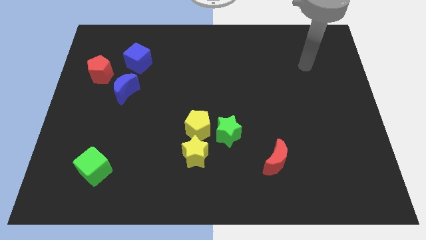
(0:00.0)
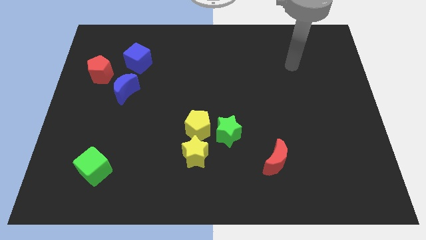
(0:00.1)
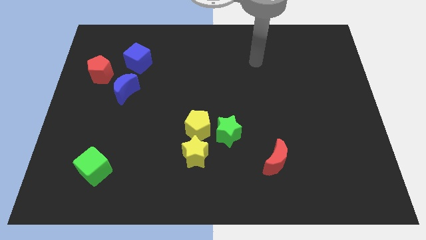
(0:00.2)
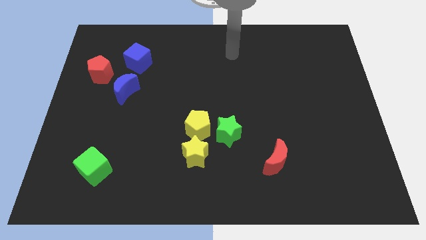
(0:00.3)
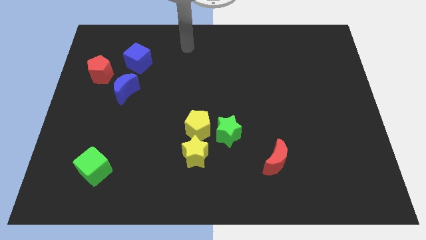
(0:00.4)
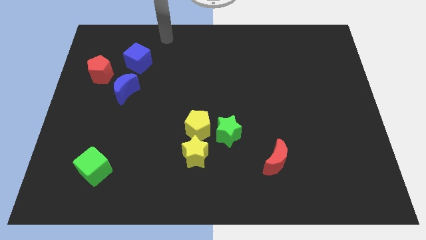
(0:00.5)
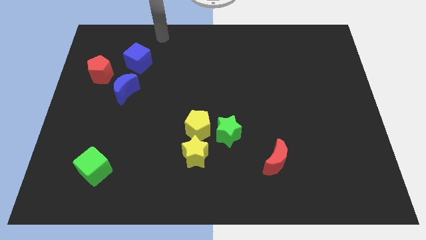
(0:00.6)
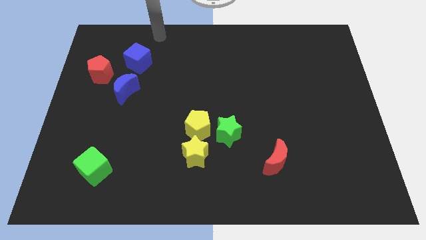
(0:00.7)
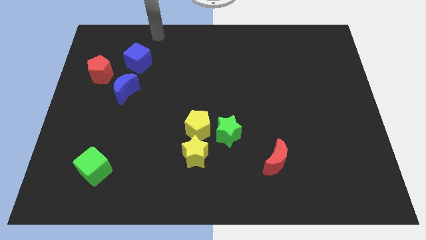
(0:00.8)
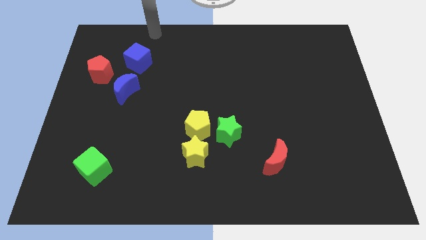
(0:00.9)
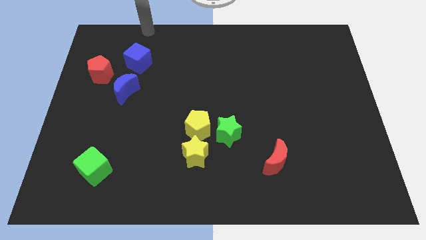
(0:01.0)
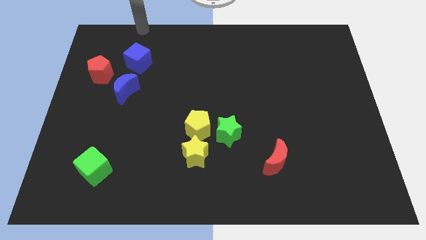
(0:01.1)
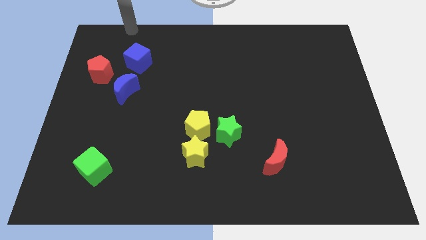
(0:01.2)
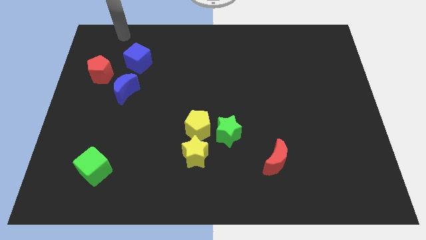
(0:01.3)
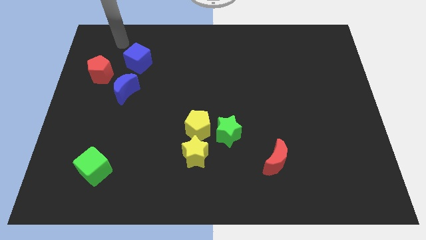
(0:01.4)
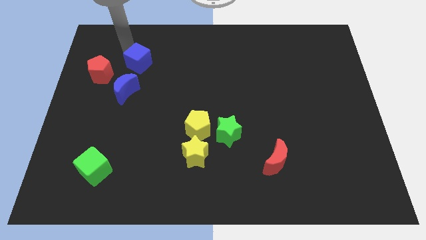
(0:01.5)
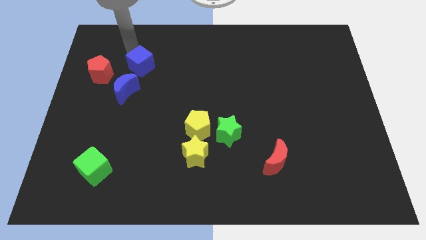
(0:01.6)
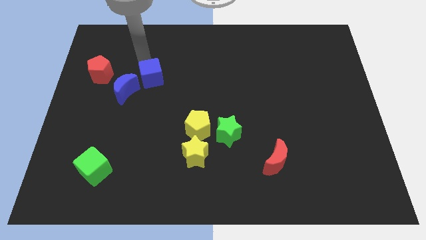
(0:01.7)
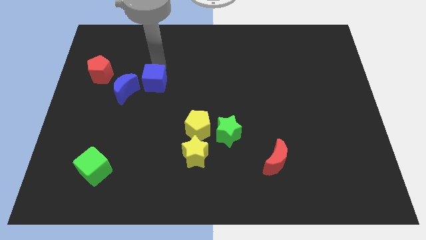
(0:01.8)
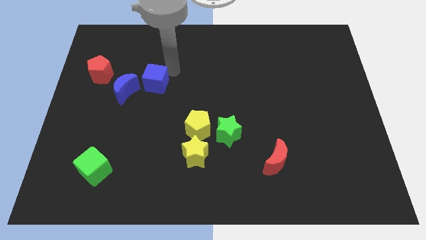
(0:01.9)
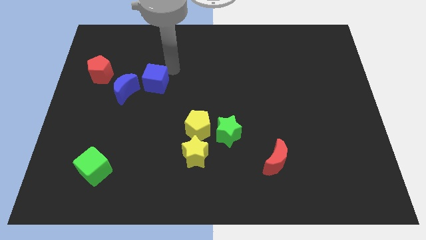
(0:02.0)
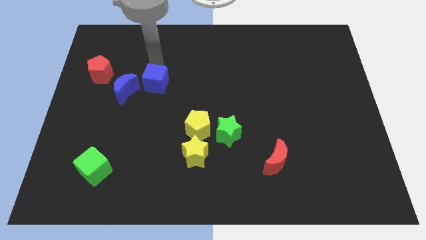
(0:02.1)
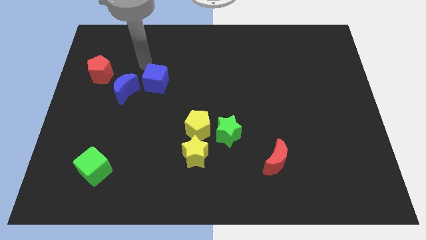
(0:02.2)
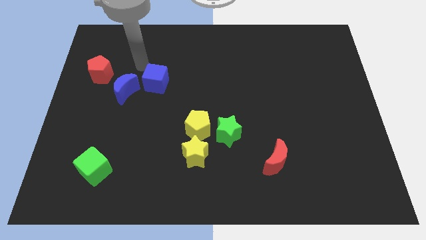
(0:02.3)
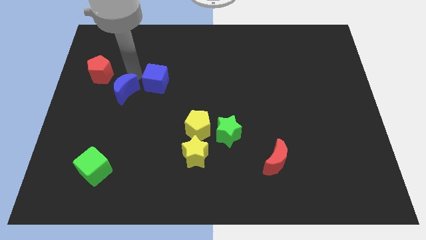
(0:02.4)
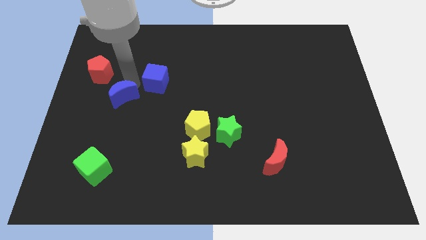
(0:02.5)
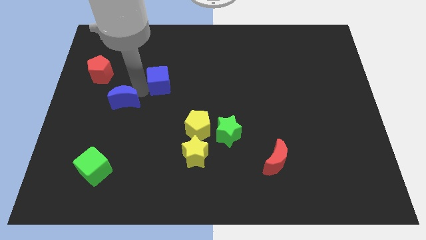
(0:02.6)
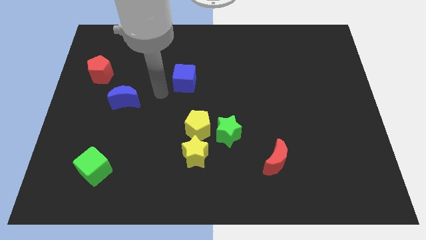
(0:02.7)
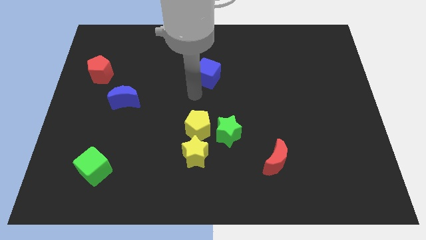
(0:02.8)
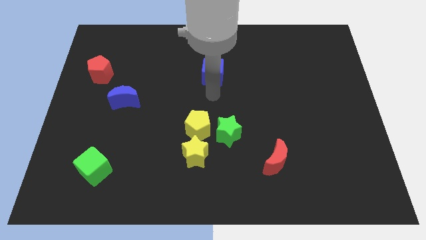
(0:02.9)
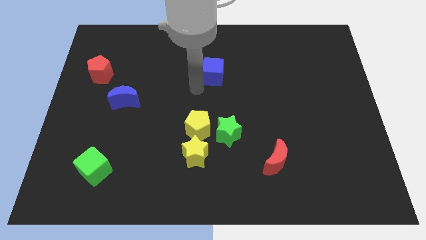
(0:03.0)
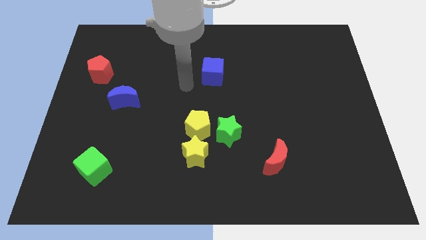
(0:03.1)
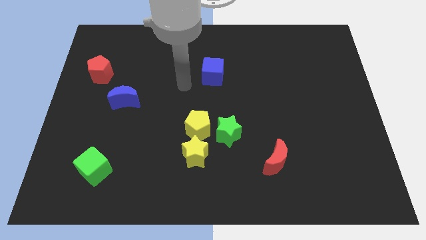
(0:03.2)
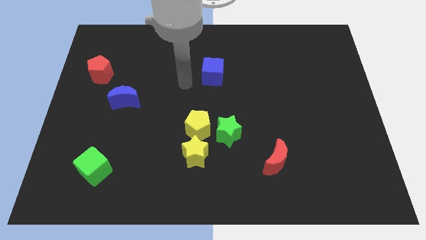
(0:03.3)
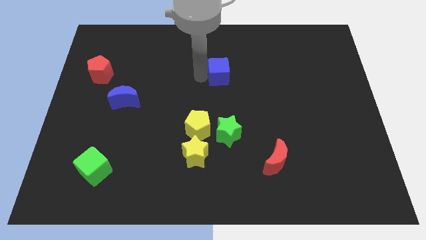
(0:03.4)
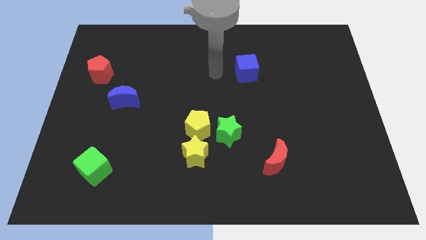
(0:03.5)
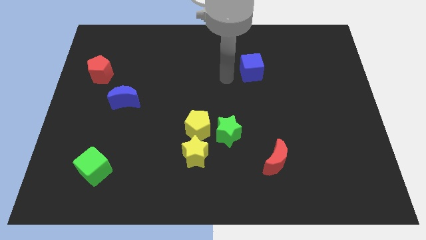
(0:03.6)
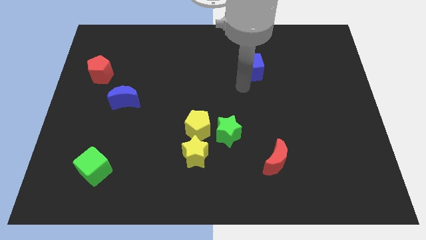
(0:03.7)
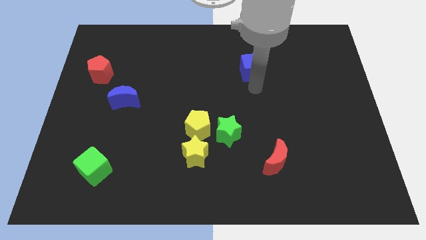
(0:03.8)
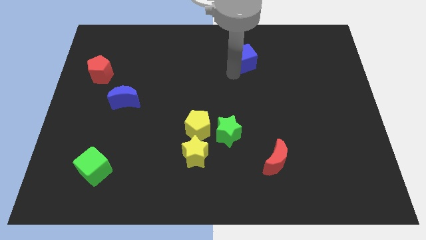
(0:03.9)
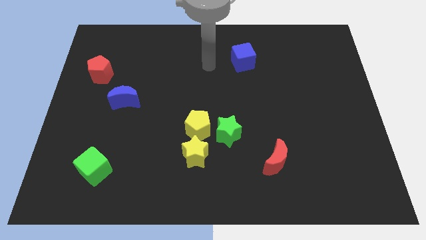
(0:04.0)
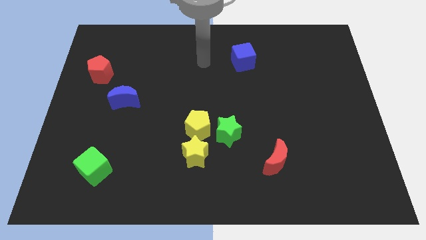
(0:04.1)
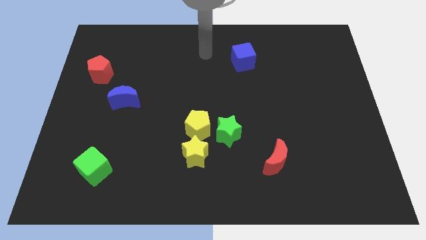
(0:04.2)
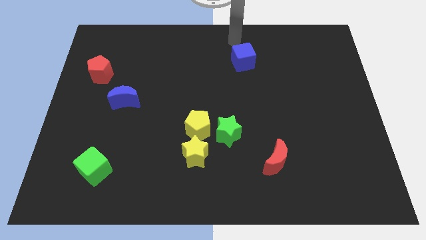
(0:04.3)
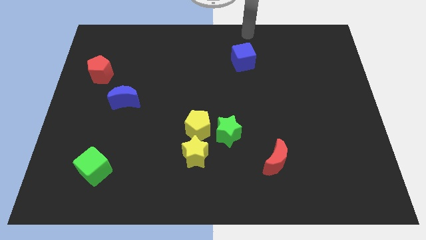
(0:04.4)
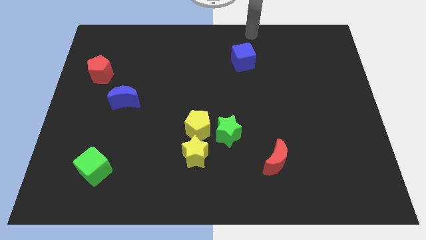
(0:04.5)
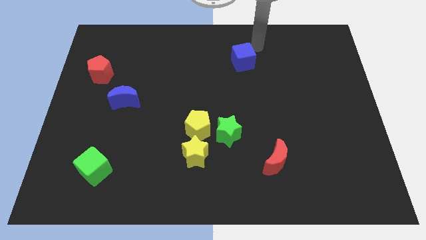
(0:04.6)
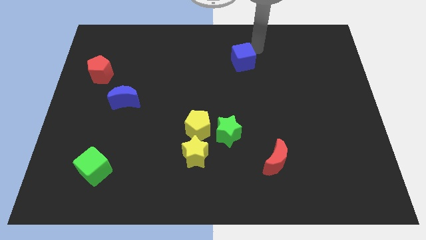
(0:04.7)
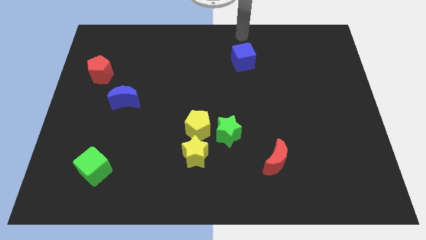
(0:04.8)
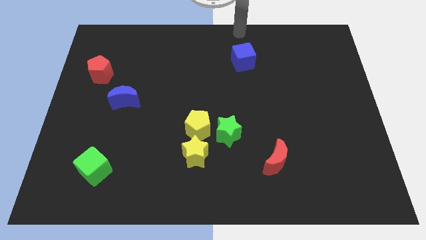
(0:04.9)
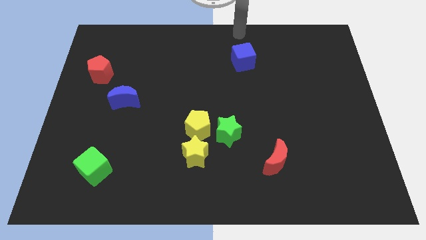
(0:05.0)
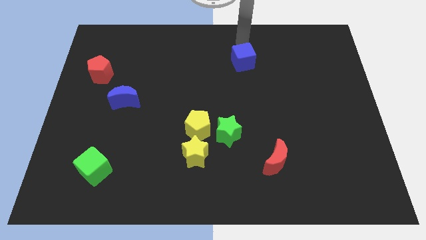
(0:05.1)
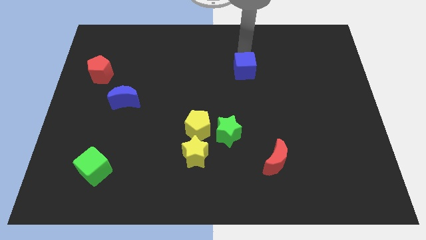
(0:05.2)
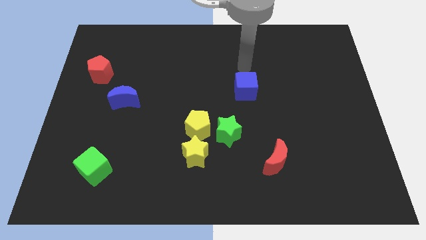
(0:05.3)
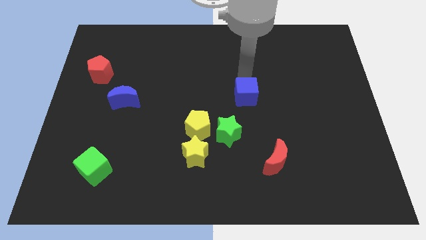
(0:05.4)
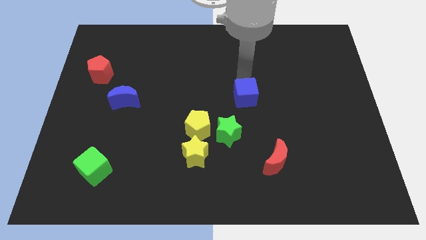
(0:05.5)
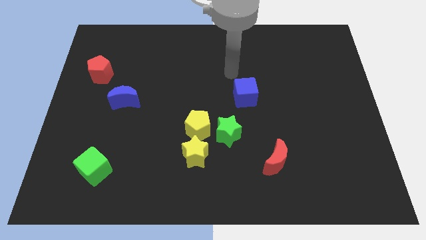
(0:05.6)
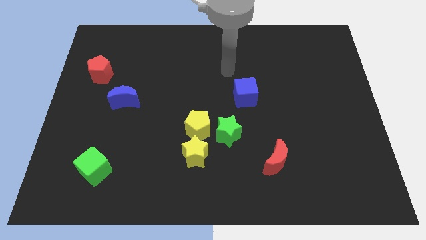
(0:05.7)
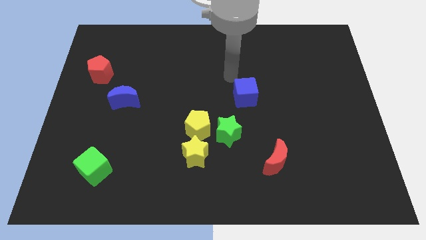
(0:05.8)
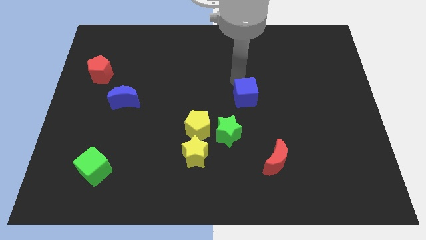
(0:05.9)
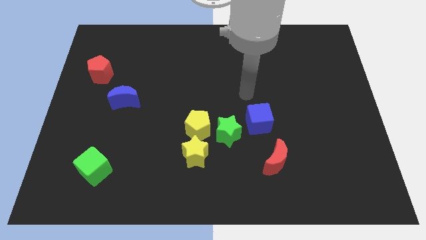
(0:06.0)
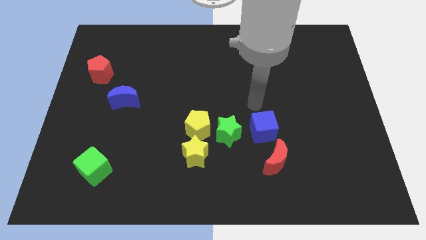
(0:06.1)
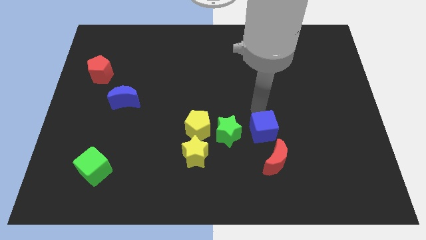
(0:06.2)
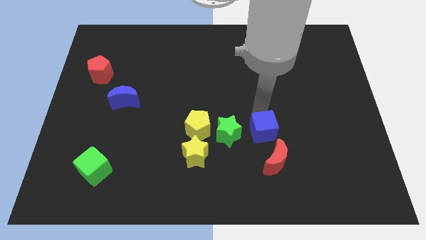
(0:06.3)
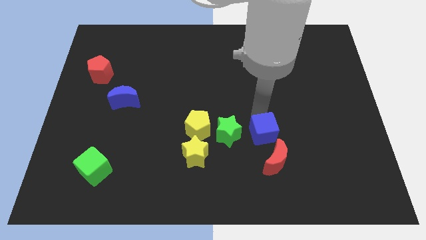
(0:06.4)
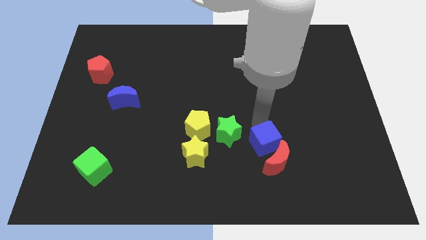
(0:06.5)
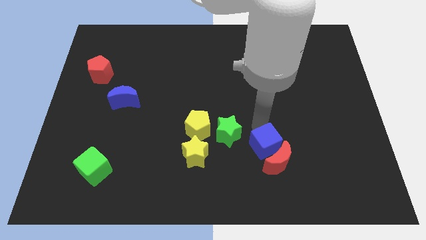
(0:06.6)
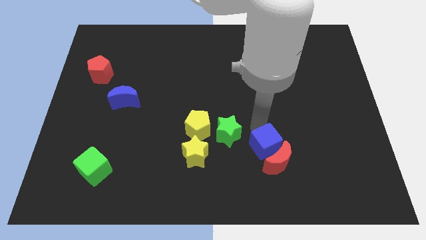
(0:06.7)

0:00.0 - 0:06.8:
slide the blue cube to the red moon

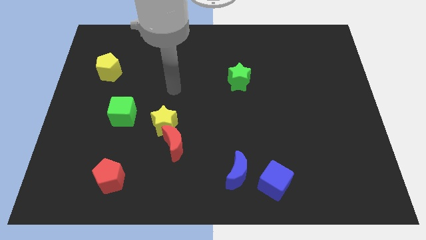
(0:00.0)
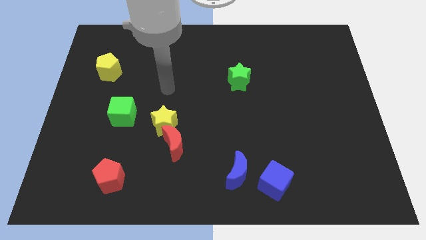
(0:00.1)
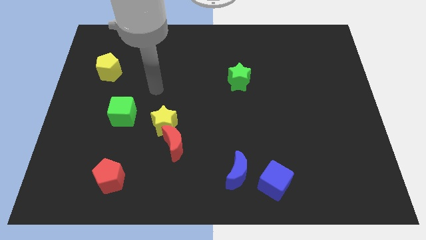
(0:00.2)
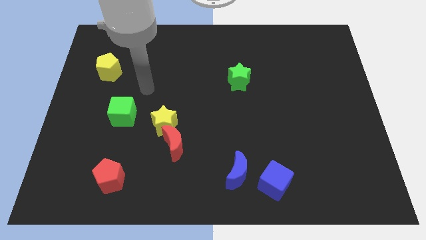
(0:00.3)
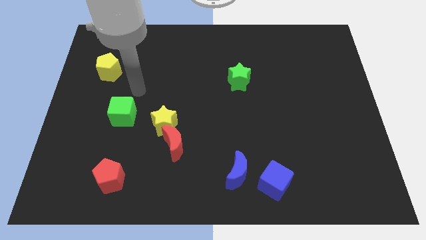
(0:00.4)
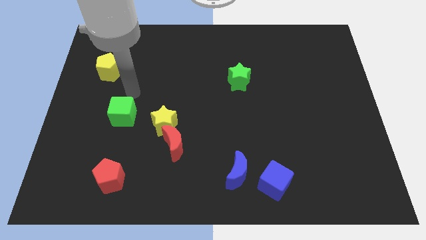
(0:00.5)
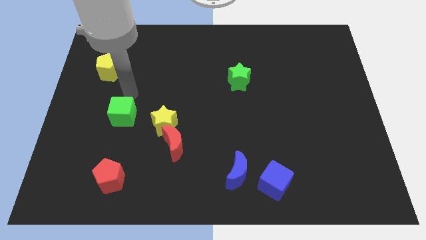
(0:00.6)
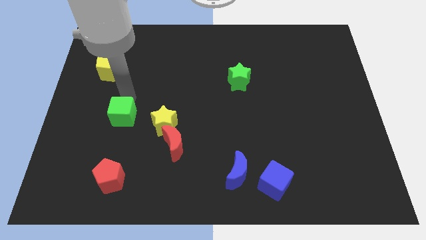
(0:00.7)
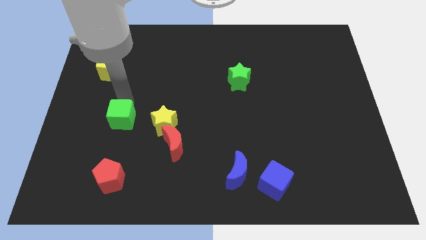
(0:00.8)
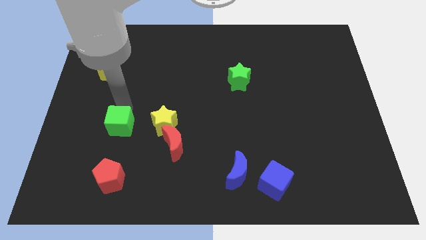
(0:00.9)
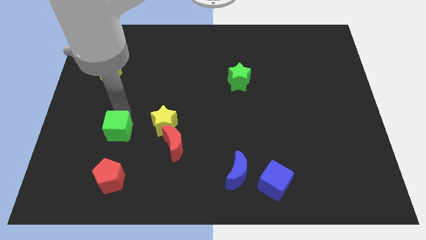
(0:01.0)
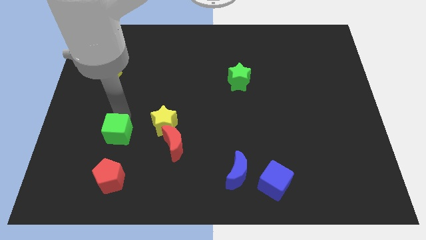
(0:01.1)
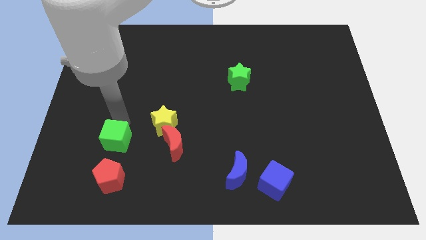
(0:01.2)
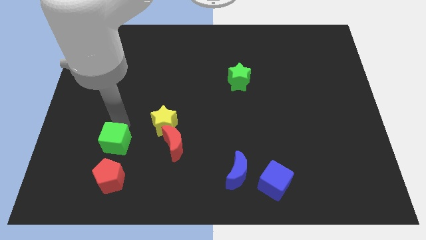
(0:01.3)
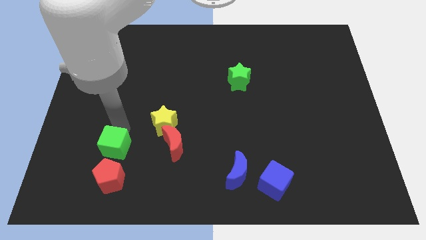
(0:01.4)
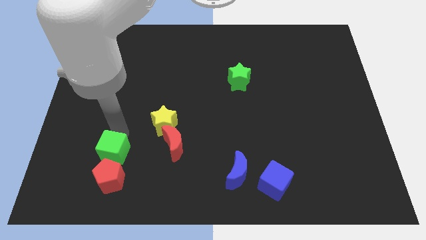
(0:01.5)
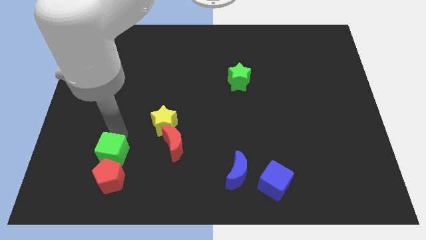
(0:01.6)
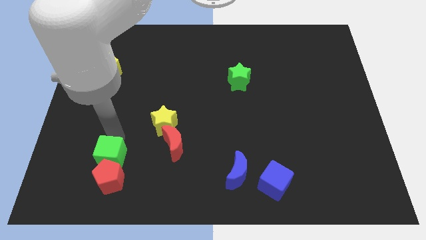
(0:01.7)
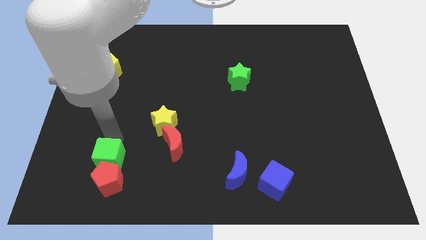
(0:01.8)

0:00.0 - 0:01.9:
move the green cube towards the red pentagon
